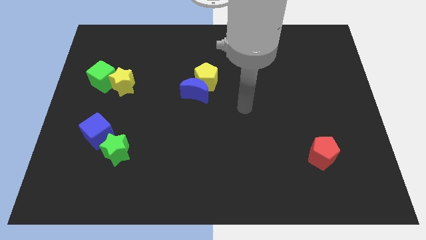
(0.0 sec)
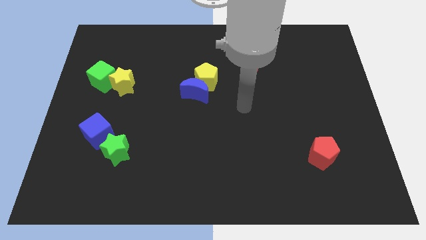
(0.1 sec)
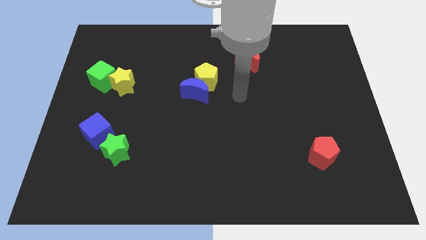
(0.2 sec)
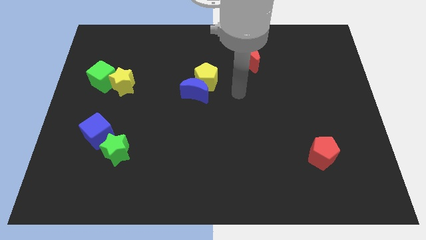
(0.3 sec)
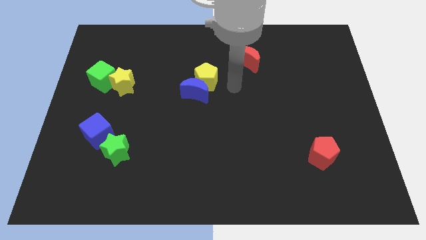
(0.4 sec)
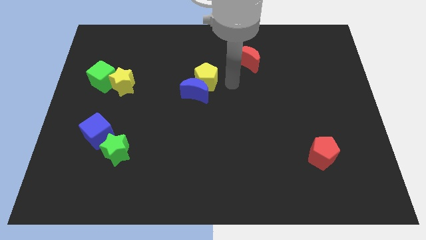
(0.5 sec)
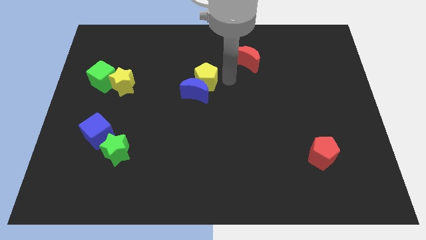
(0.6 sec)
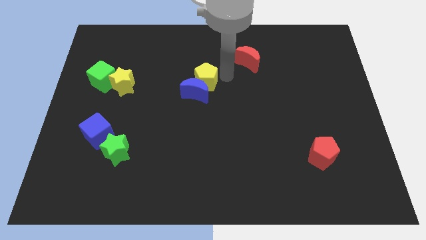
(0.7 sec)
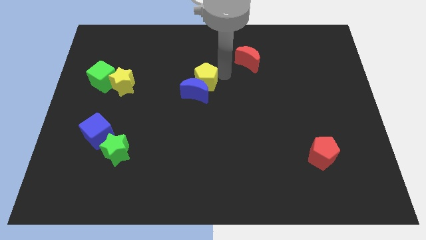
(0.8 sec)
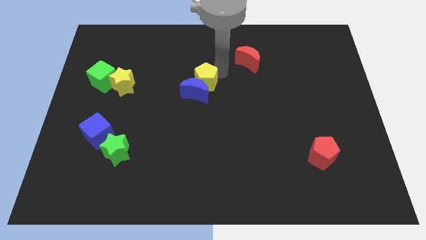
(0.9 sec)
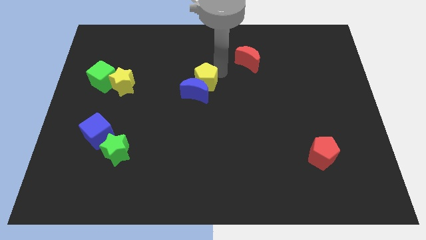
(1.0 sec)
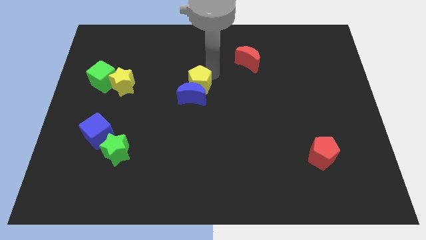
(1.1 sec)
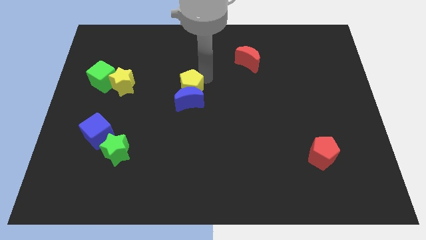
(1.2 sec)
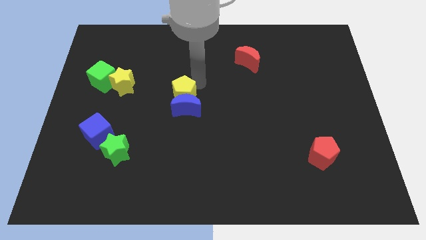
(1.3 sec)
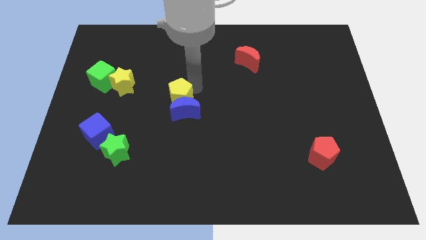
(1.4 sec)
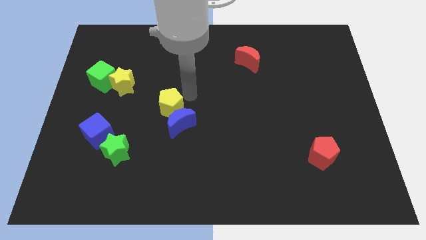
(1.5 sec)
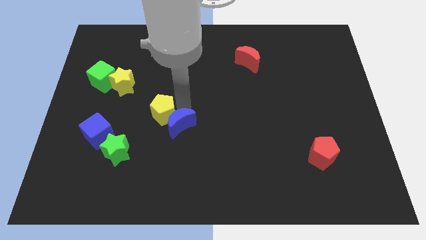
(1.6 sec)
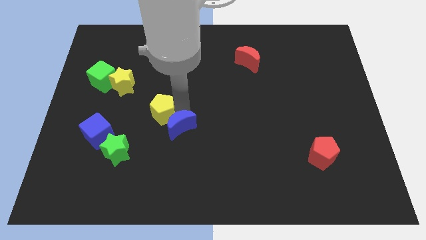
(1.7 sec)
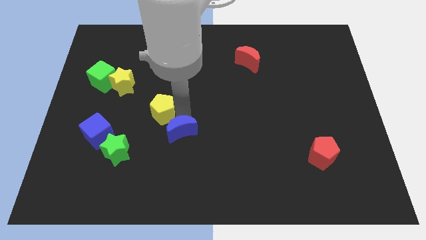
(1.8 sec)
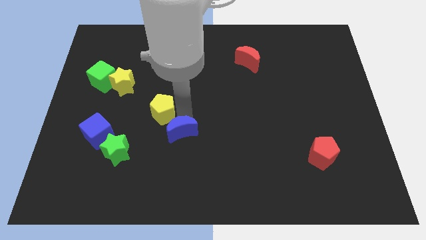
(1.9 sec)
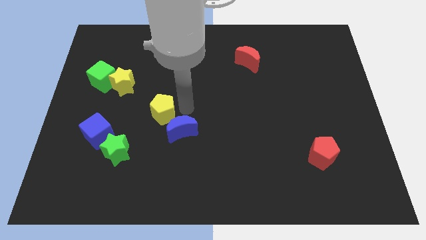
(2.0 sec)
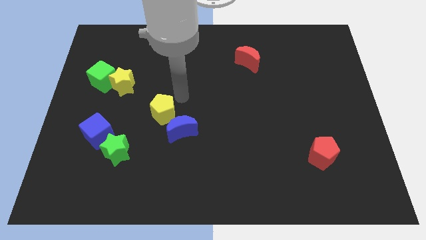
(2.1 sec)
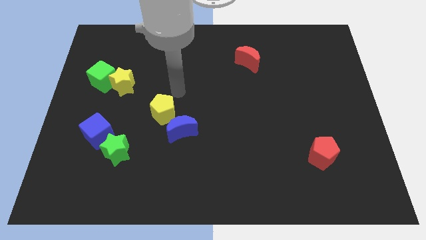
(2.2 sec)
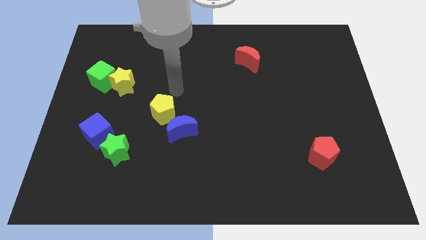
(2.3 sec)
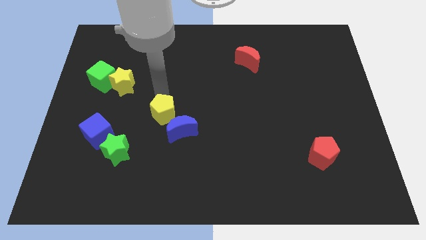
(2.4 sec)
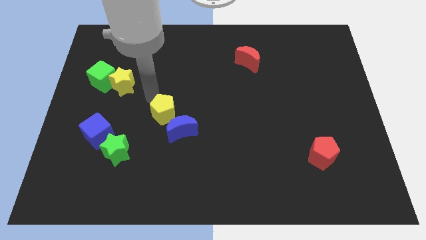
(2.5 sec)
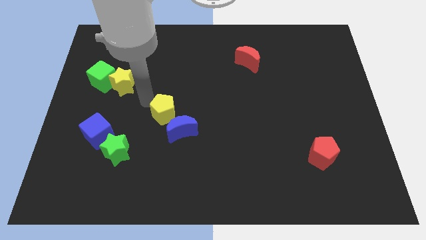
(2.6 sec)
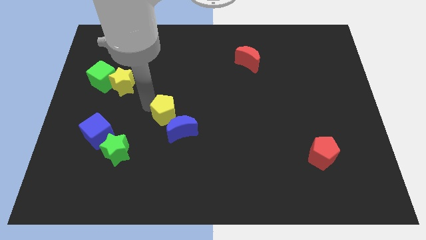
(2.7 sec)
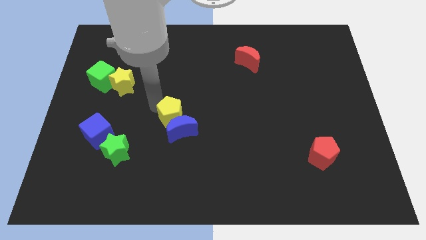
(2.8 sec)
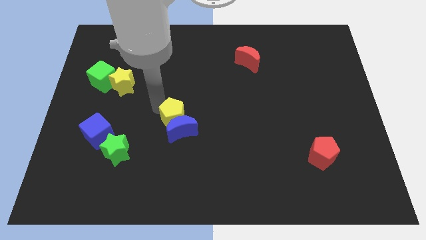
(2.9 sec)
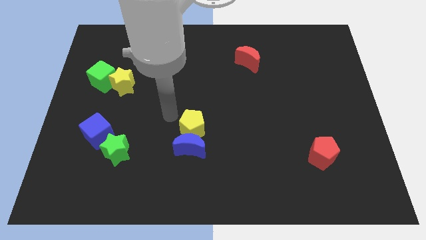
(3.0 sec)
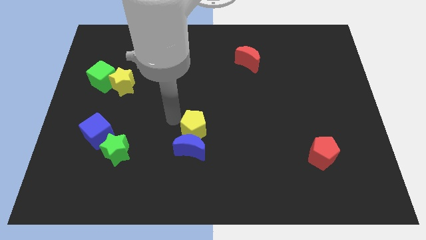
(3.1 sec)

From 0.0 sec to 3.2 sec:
move yellow pentagon and blue moon slightly down

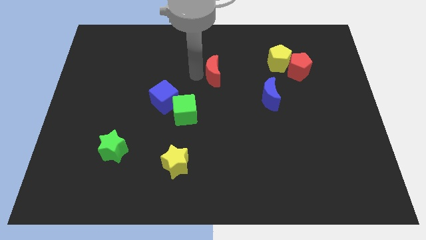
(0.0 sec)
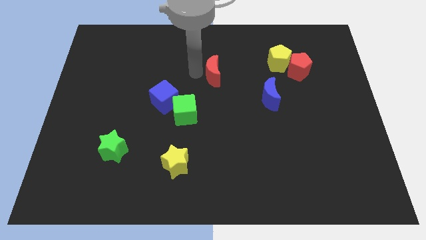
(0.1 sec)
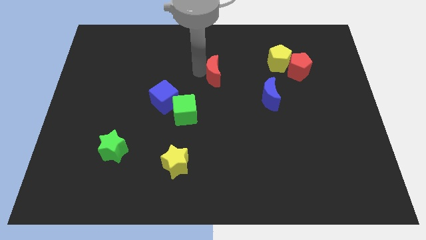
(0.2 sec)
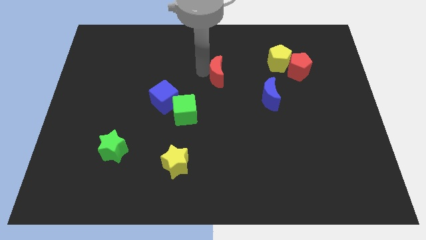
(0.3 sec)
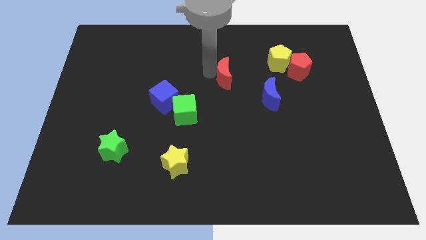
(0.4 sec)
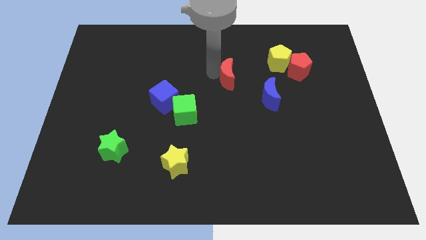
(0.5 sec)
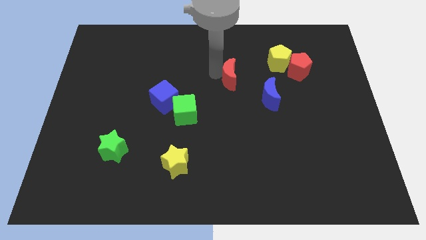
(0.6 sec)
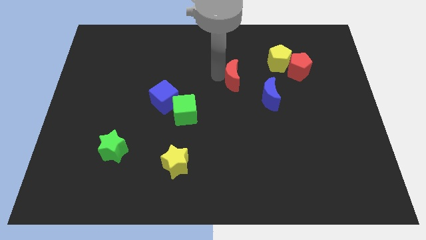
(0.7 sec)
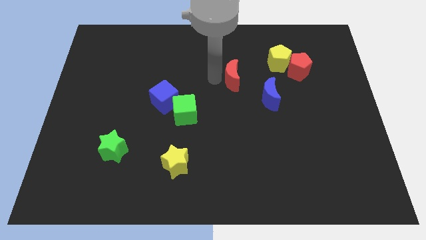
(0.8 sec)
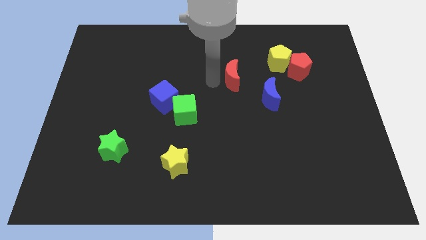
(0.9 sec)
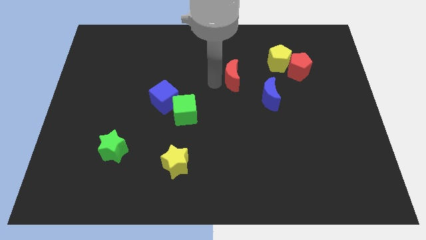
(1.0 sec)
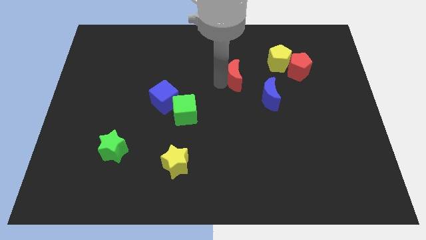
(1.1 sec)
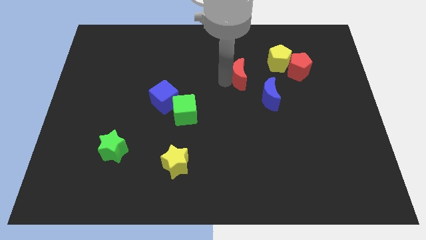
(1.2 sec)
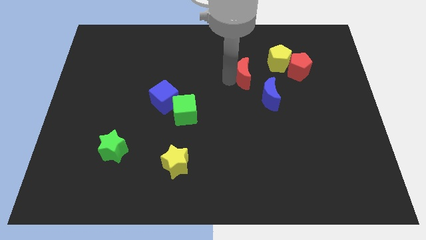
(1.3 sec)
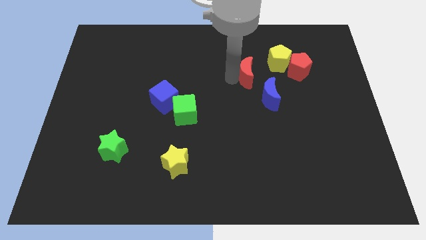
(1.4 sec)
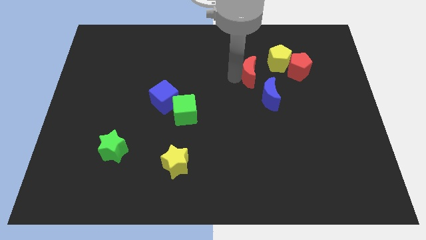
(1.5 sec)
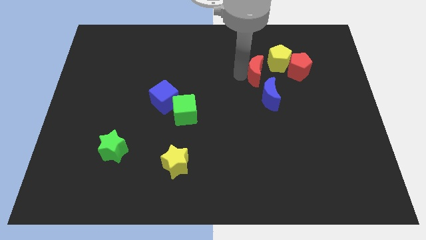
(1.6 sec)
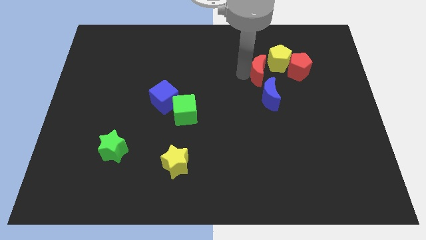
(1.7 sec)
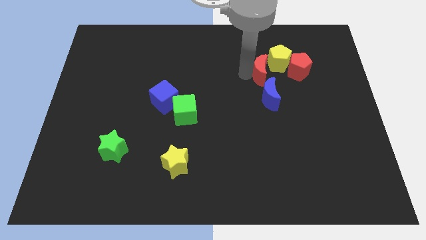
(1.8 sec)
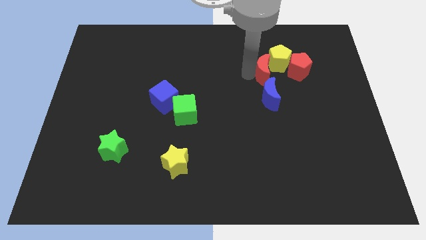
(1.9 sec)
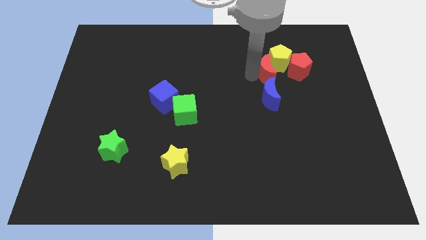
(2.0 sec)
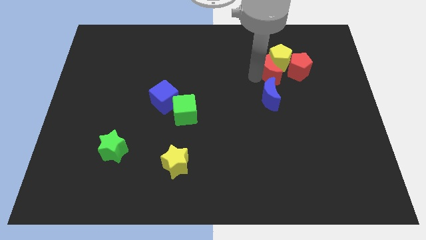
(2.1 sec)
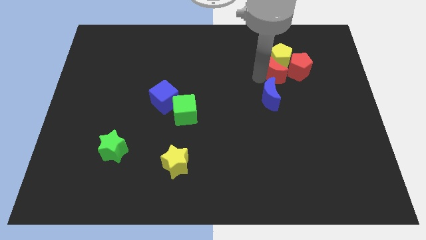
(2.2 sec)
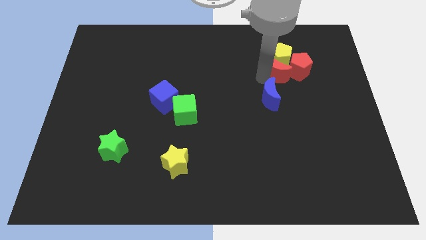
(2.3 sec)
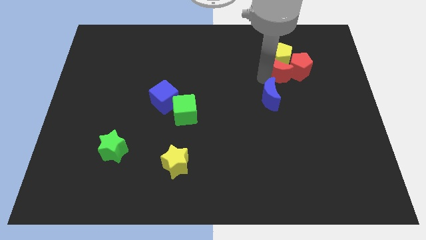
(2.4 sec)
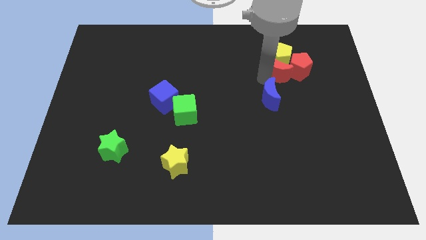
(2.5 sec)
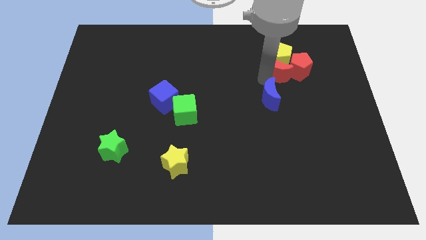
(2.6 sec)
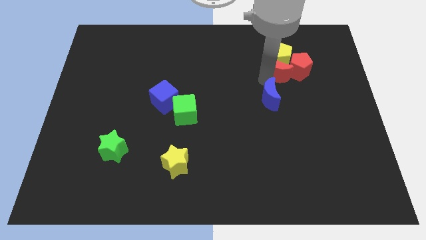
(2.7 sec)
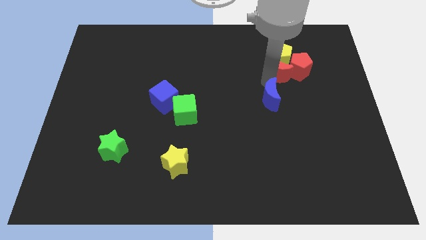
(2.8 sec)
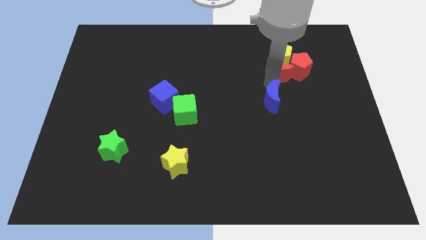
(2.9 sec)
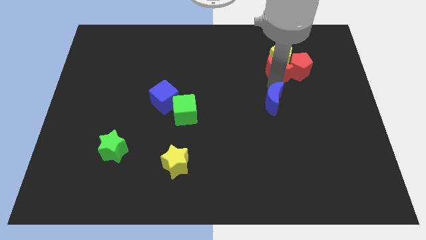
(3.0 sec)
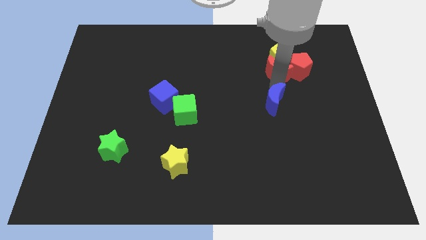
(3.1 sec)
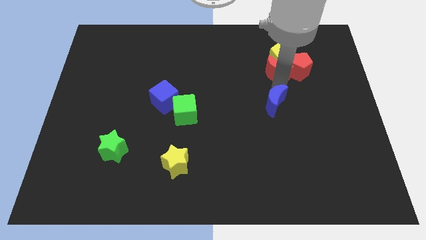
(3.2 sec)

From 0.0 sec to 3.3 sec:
push the red crescent into the yellow pentagon

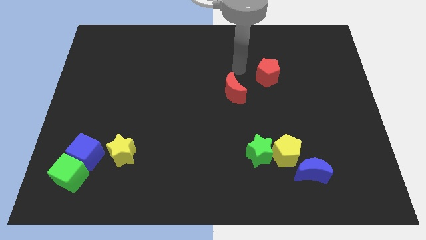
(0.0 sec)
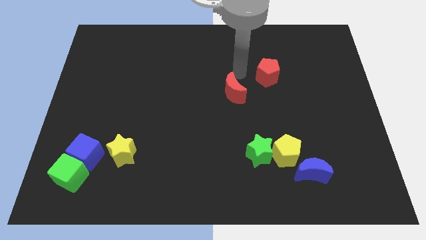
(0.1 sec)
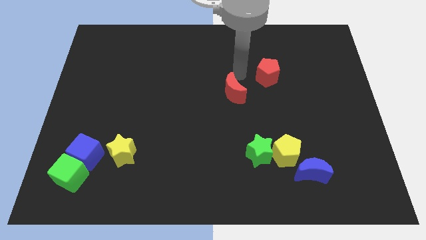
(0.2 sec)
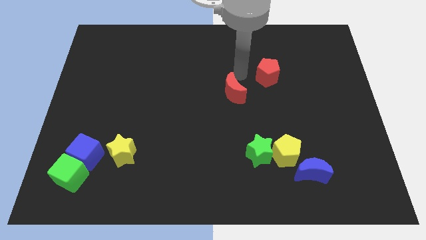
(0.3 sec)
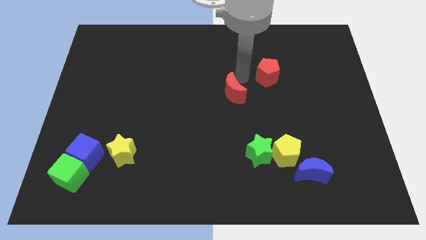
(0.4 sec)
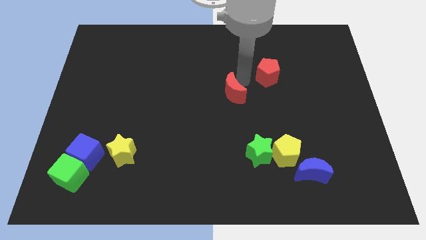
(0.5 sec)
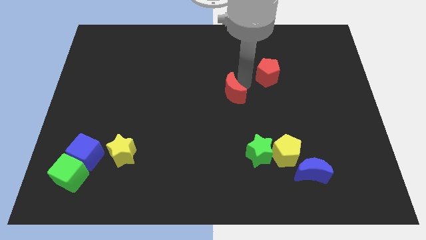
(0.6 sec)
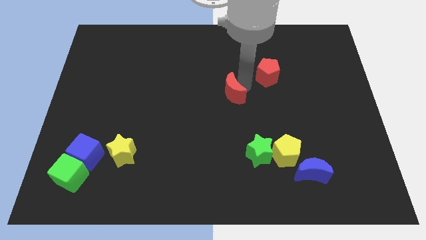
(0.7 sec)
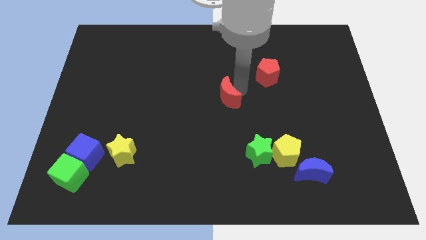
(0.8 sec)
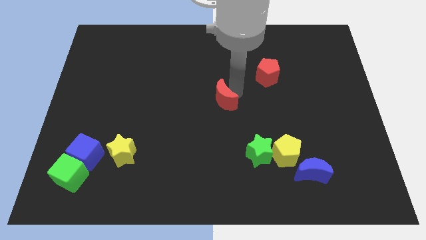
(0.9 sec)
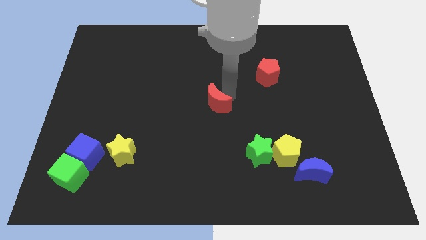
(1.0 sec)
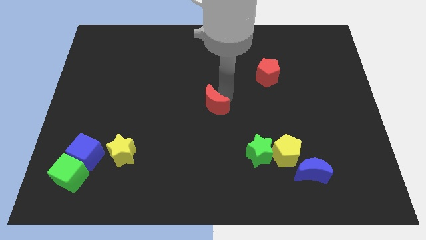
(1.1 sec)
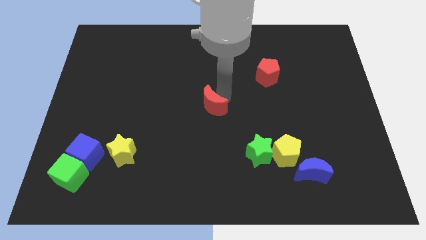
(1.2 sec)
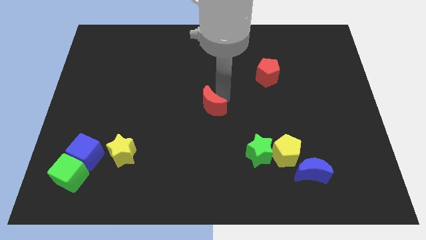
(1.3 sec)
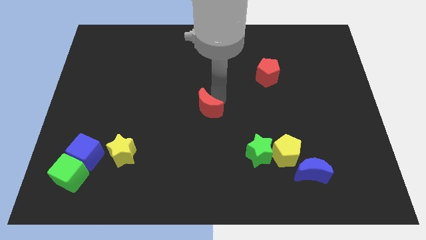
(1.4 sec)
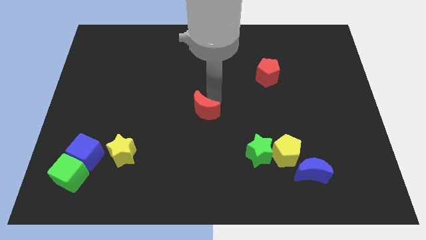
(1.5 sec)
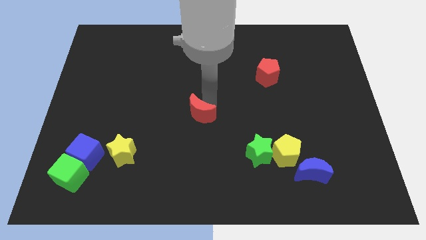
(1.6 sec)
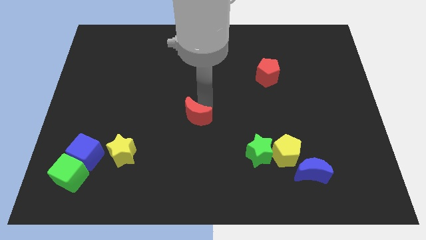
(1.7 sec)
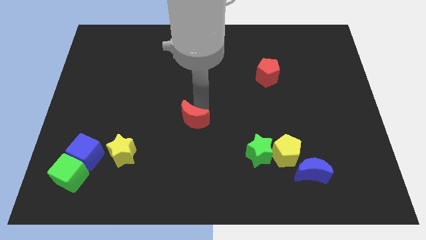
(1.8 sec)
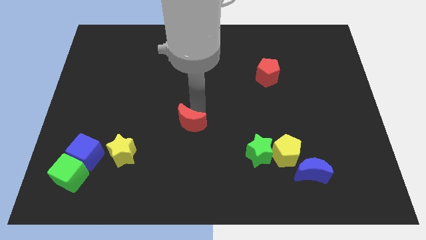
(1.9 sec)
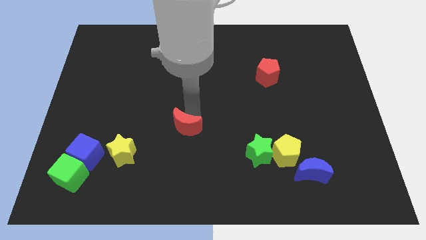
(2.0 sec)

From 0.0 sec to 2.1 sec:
drag the red moon towards the yellow star

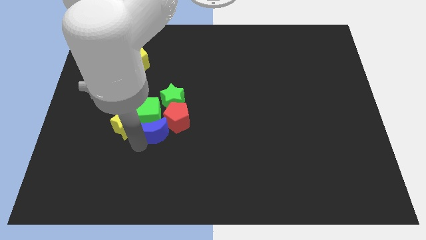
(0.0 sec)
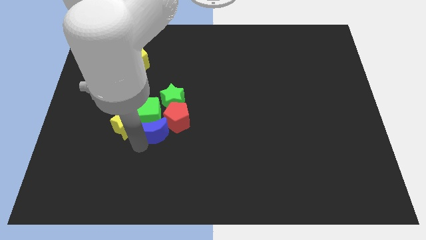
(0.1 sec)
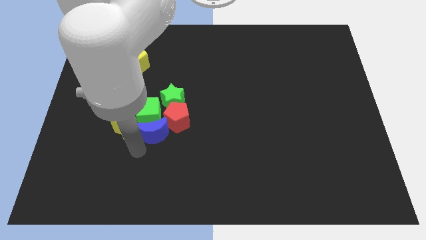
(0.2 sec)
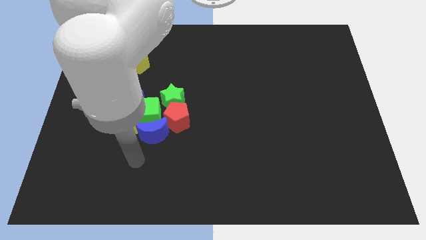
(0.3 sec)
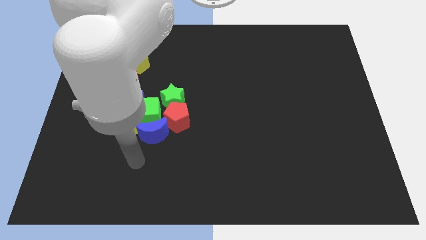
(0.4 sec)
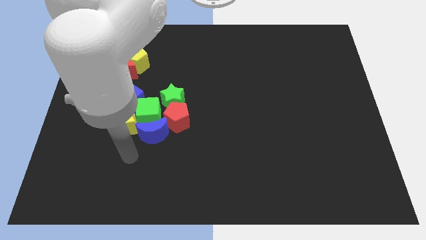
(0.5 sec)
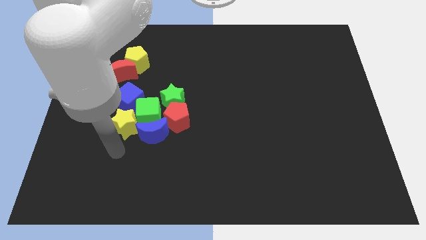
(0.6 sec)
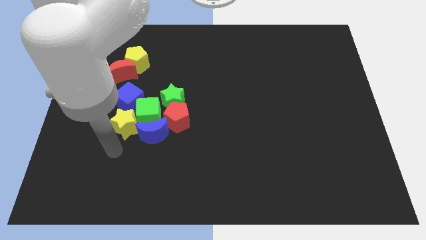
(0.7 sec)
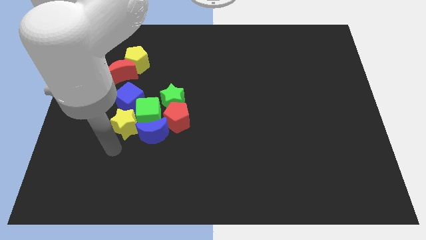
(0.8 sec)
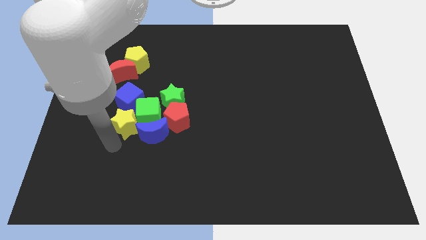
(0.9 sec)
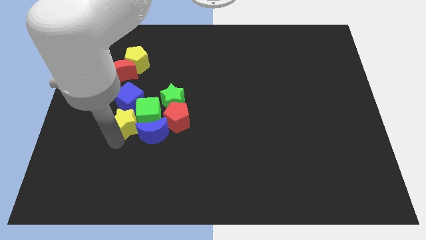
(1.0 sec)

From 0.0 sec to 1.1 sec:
point your arm at the bottom of the yellow star
